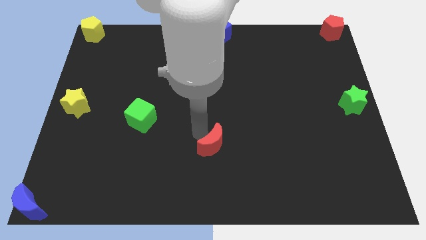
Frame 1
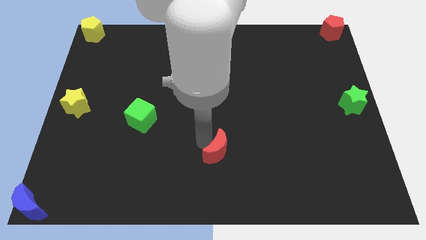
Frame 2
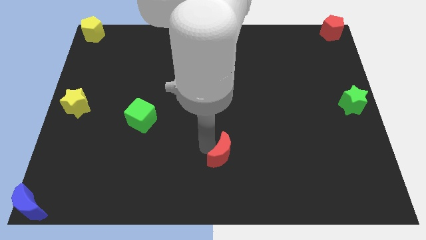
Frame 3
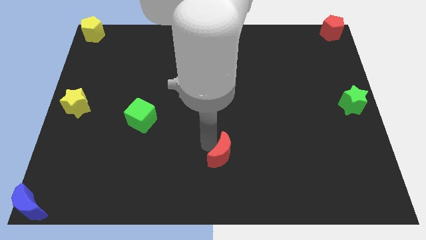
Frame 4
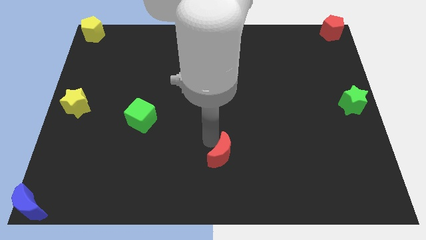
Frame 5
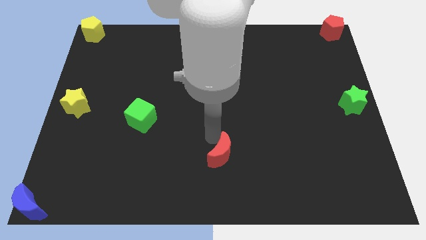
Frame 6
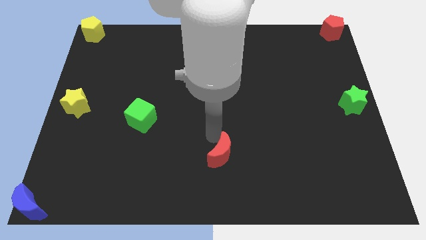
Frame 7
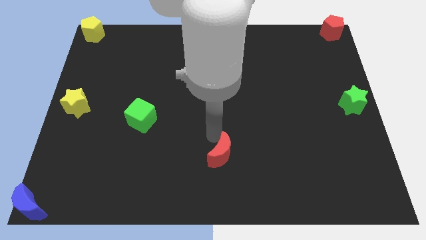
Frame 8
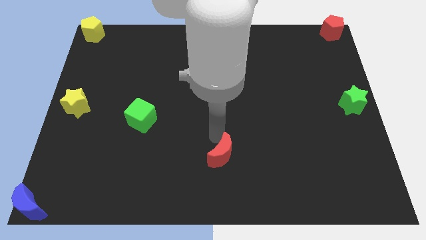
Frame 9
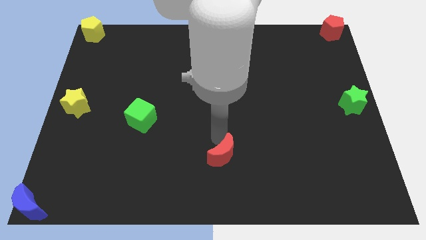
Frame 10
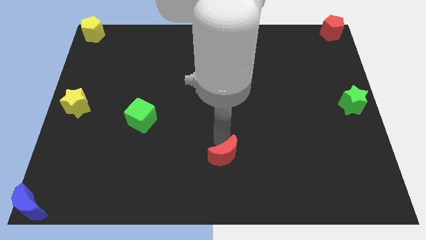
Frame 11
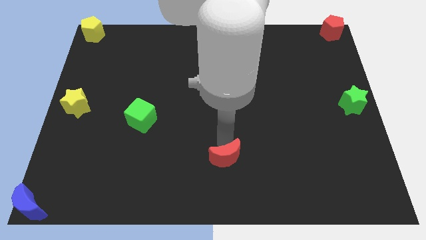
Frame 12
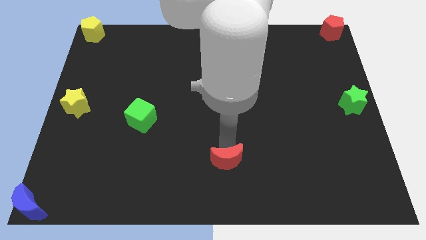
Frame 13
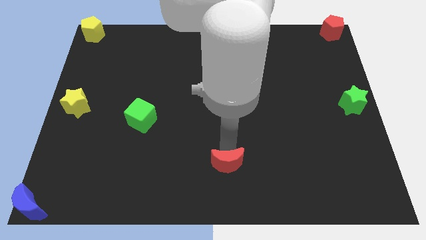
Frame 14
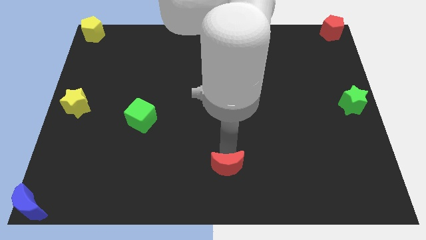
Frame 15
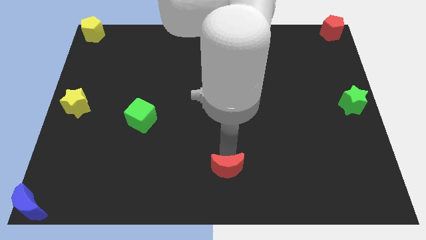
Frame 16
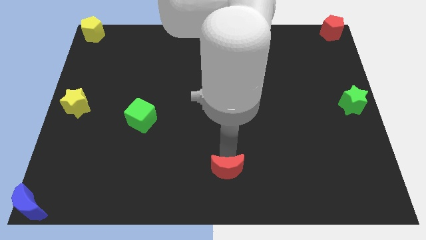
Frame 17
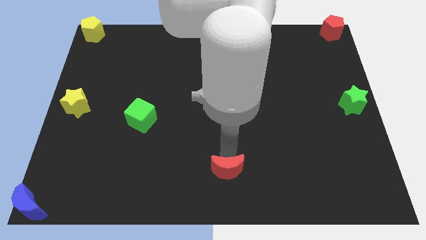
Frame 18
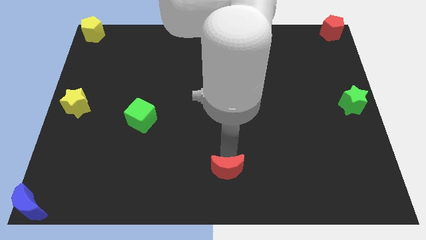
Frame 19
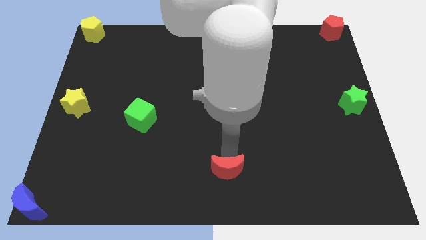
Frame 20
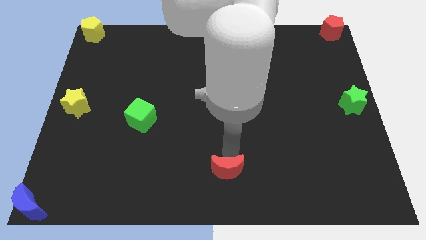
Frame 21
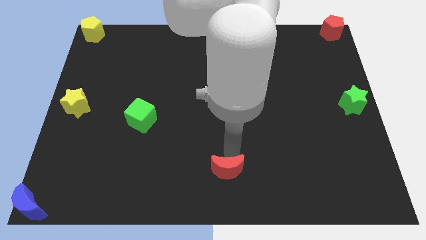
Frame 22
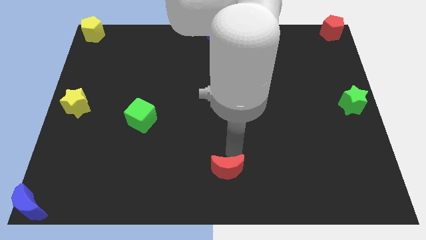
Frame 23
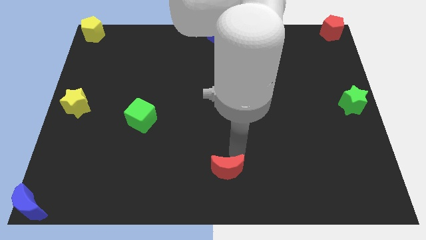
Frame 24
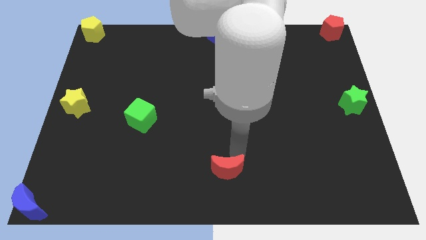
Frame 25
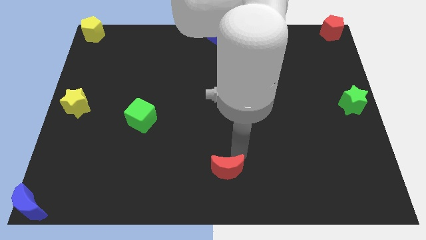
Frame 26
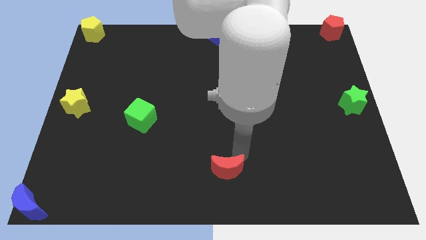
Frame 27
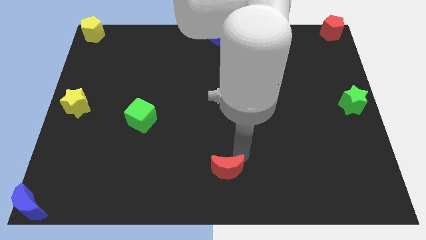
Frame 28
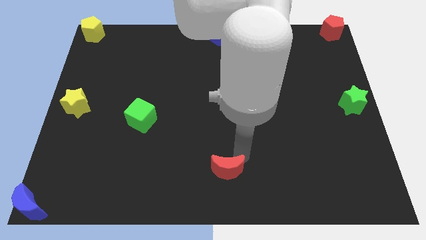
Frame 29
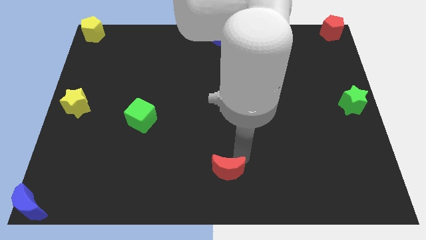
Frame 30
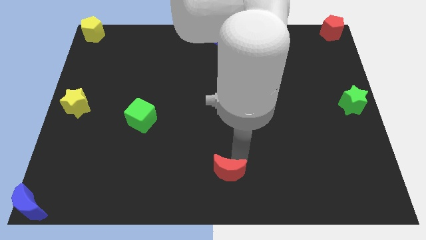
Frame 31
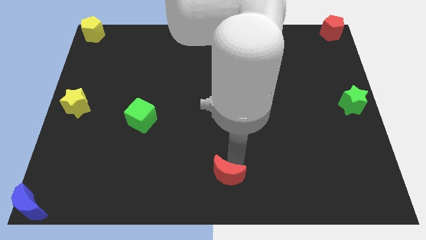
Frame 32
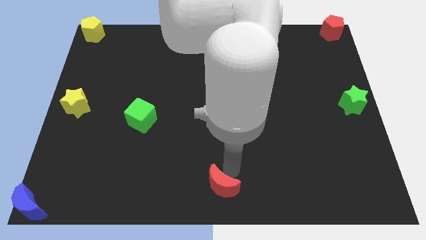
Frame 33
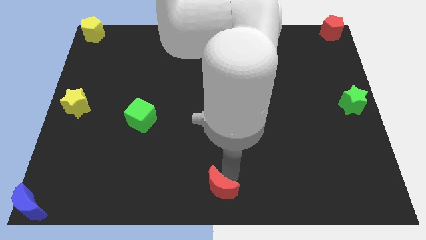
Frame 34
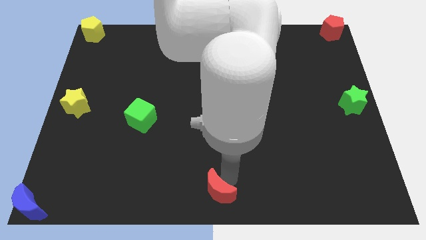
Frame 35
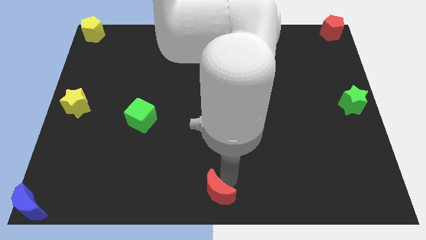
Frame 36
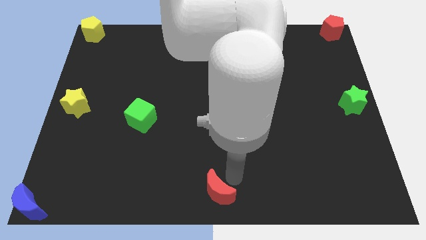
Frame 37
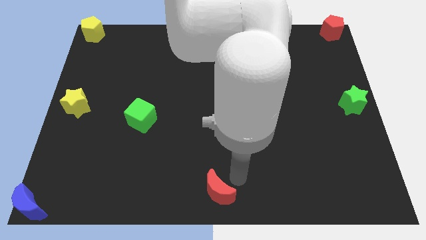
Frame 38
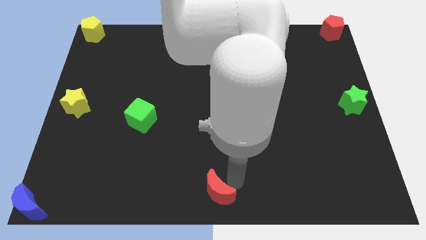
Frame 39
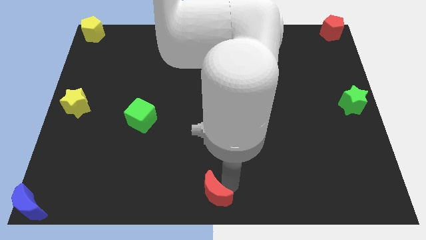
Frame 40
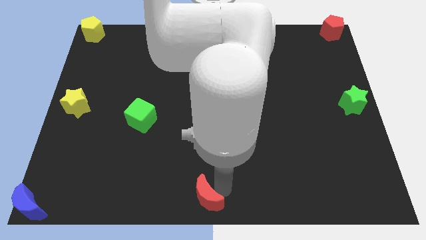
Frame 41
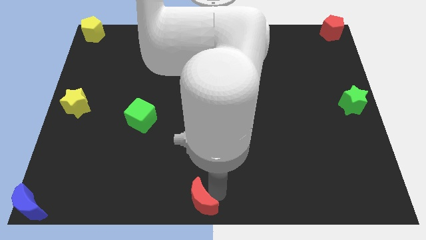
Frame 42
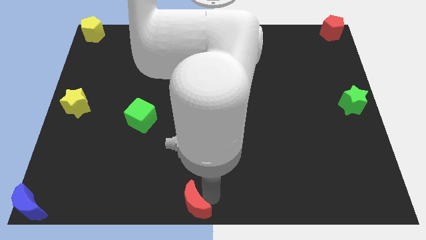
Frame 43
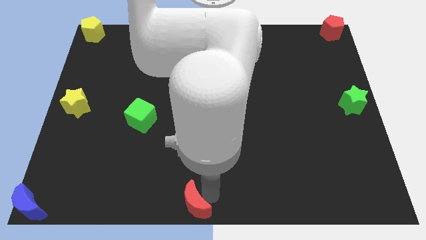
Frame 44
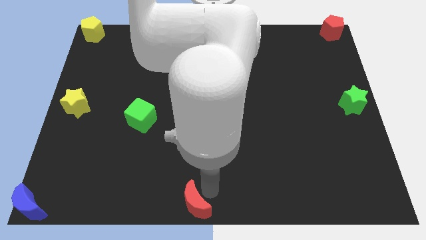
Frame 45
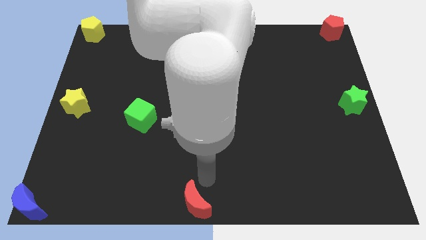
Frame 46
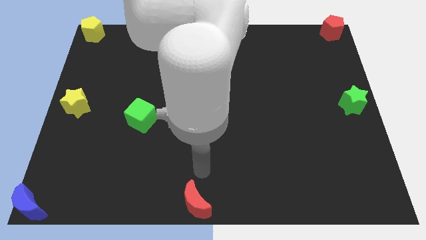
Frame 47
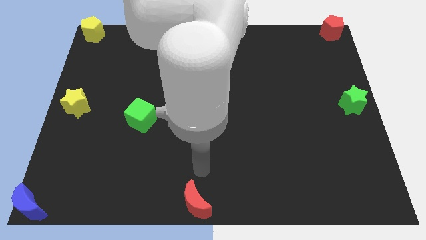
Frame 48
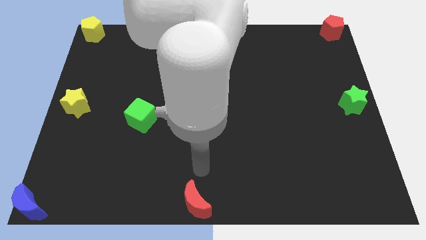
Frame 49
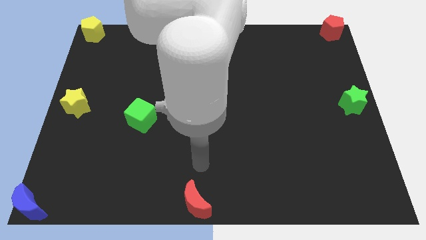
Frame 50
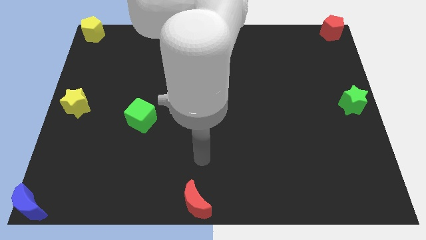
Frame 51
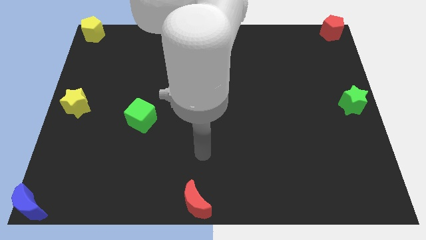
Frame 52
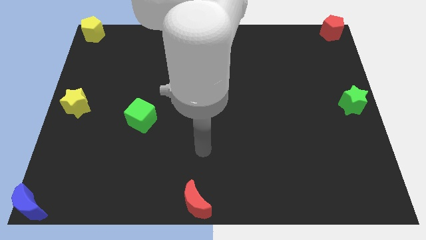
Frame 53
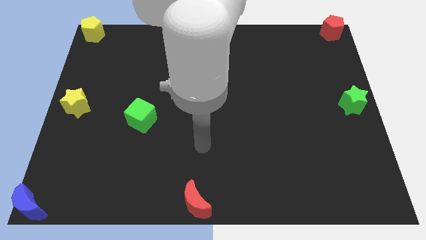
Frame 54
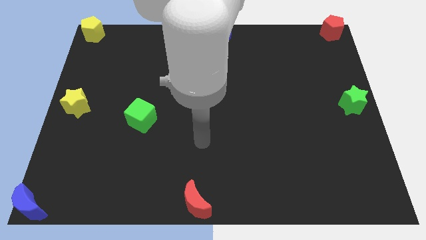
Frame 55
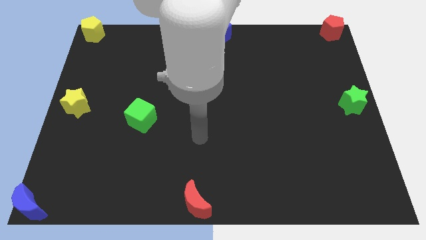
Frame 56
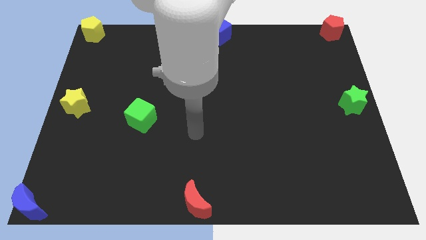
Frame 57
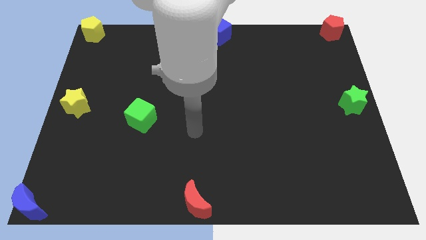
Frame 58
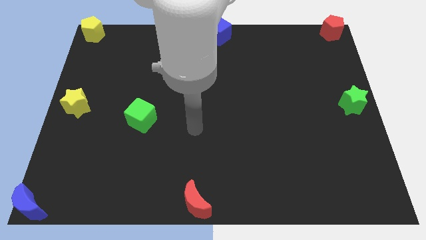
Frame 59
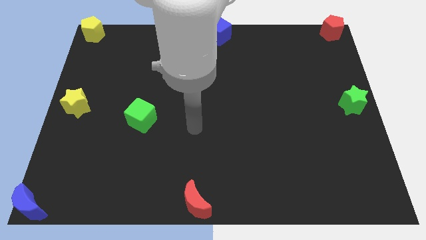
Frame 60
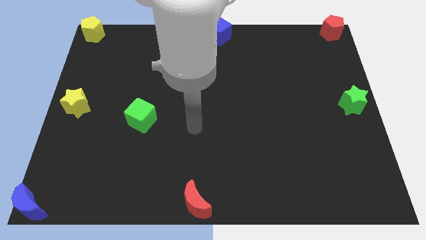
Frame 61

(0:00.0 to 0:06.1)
slide the red moon to the bottom center of the board

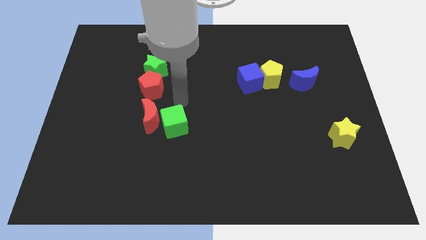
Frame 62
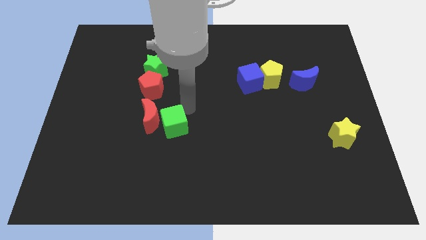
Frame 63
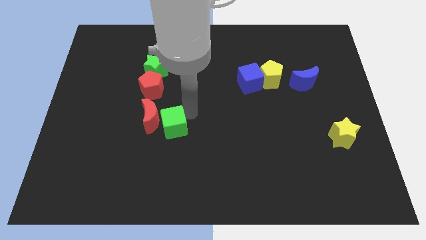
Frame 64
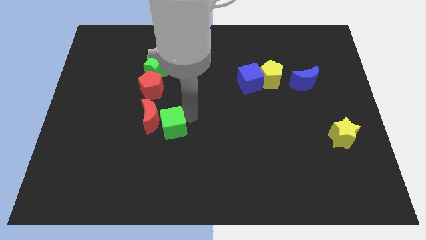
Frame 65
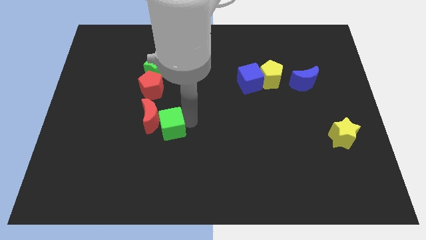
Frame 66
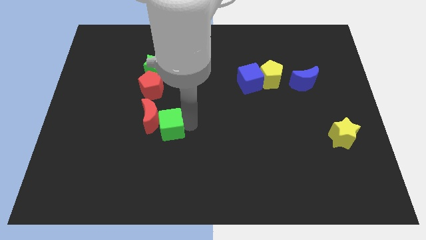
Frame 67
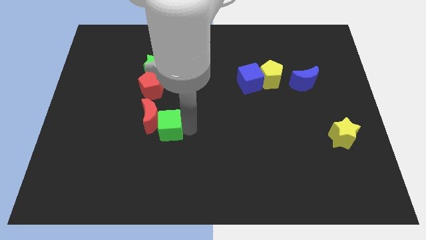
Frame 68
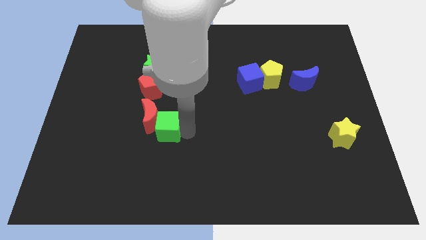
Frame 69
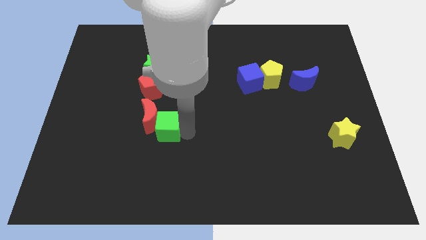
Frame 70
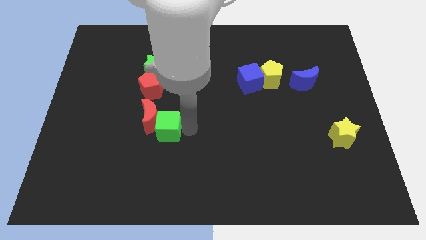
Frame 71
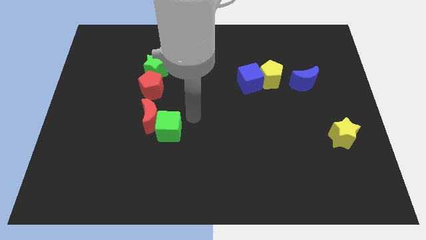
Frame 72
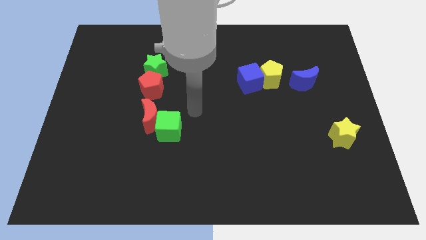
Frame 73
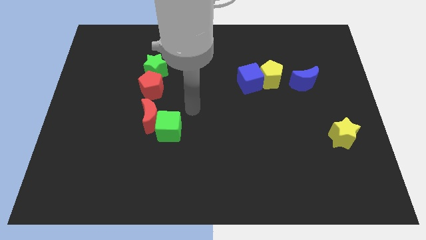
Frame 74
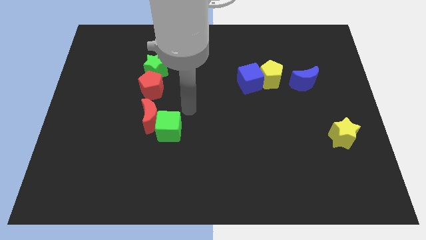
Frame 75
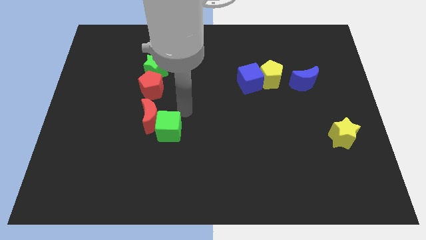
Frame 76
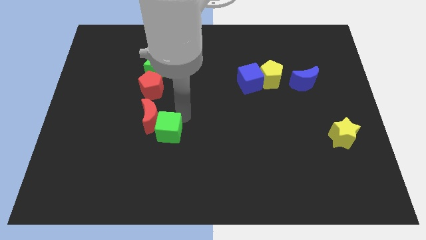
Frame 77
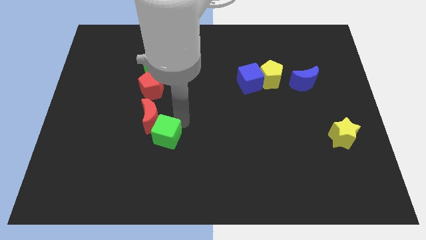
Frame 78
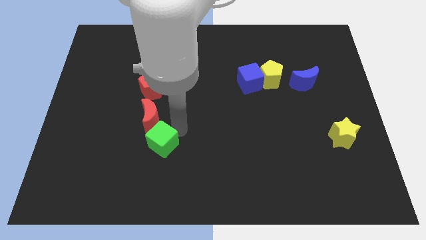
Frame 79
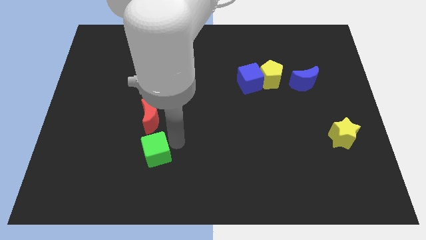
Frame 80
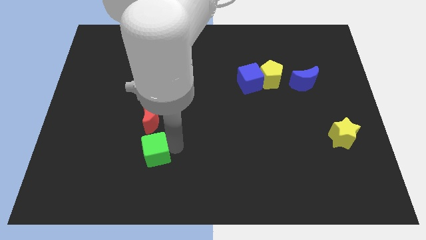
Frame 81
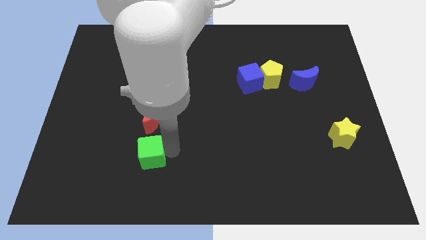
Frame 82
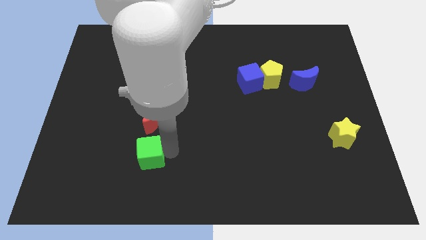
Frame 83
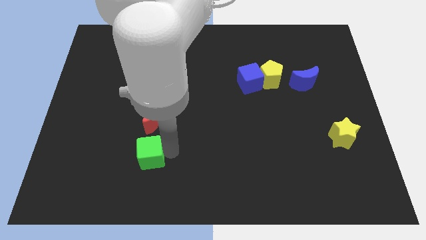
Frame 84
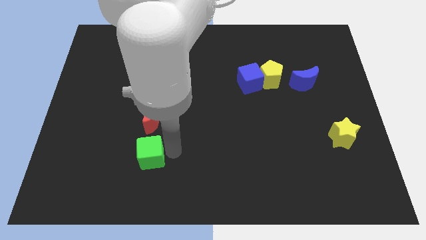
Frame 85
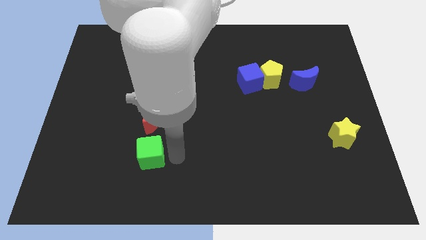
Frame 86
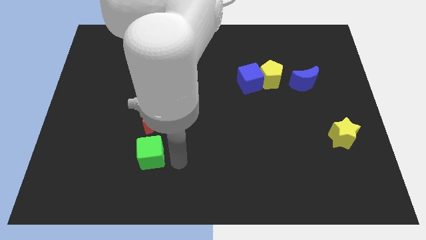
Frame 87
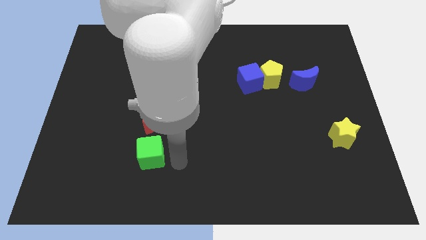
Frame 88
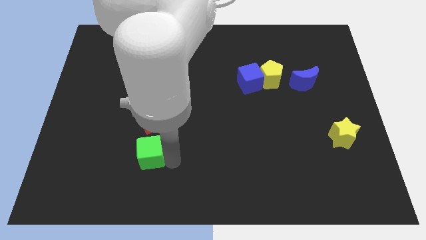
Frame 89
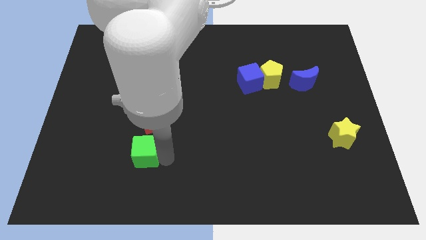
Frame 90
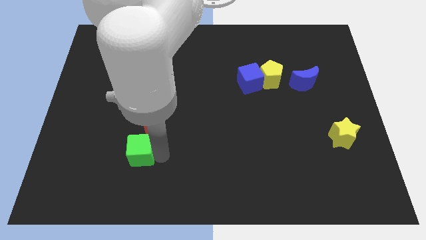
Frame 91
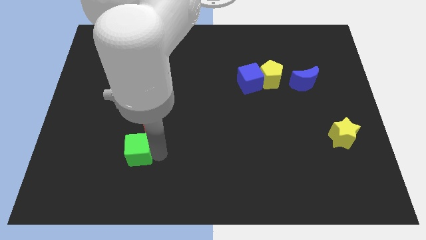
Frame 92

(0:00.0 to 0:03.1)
push green cube to left bottom of the board
